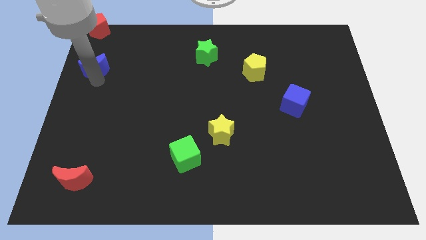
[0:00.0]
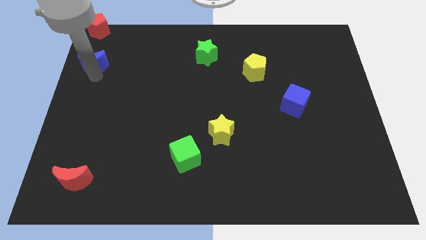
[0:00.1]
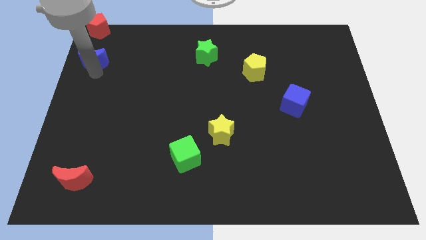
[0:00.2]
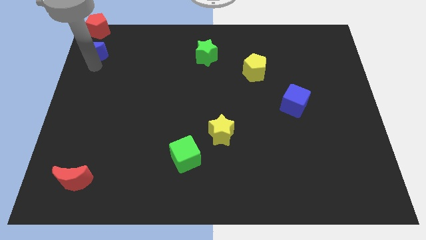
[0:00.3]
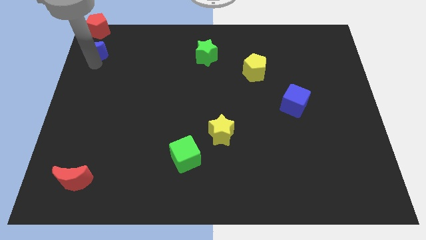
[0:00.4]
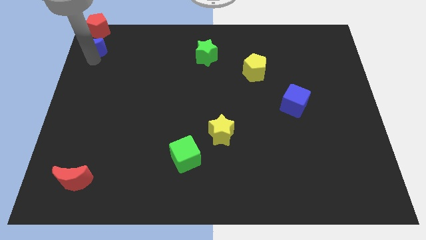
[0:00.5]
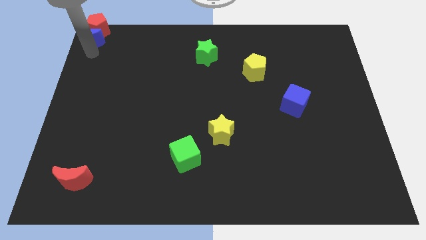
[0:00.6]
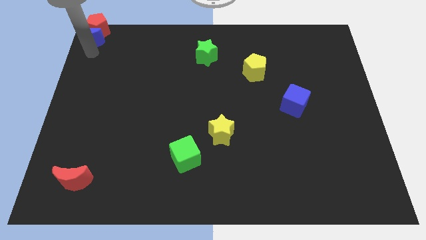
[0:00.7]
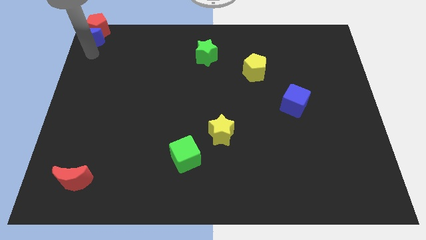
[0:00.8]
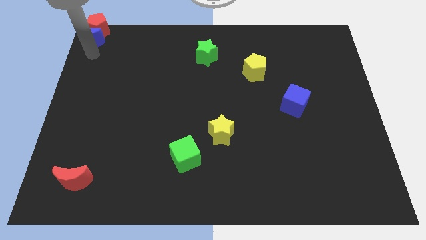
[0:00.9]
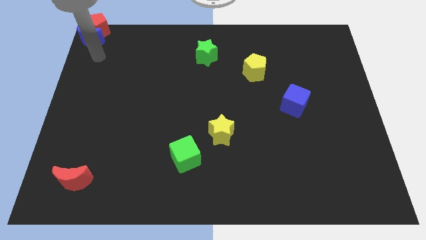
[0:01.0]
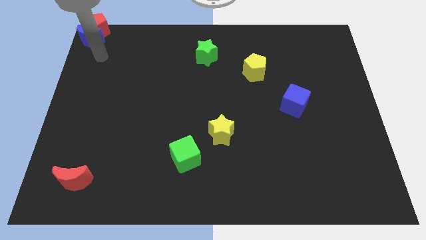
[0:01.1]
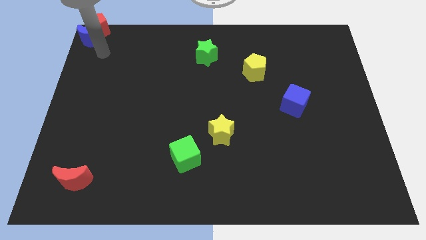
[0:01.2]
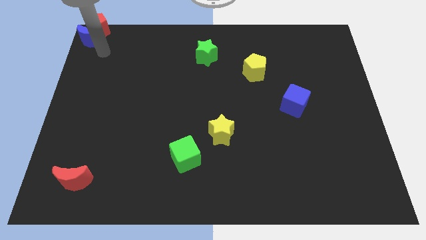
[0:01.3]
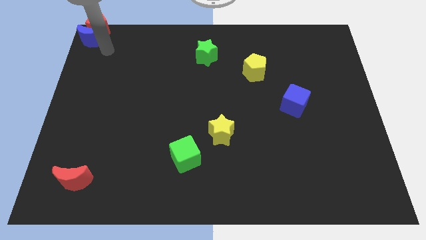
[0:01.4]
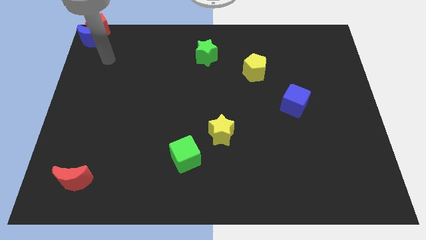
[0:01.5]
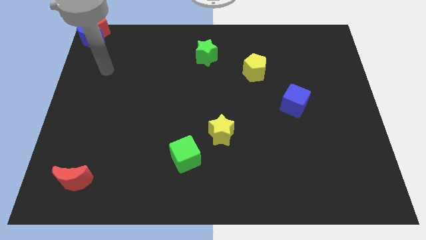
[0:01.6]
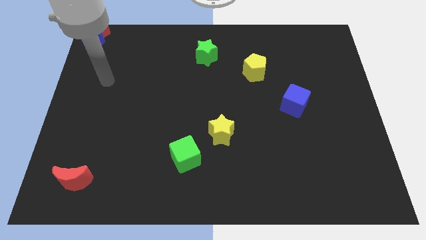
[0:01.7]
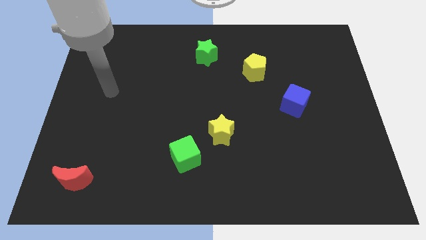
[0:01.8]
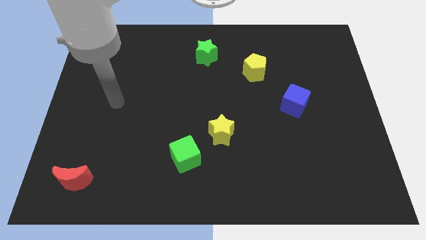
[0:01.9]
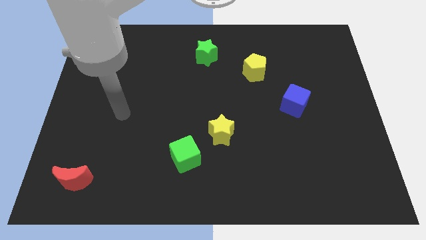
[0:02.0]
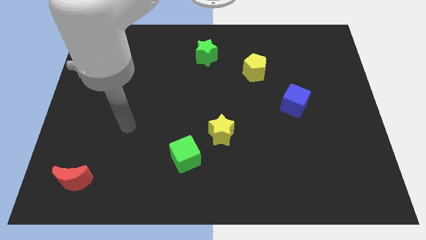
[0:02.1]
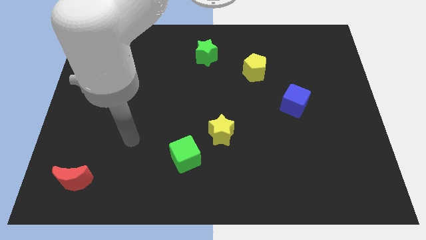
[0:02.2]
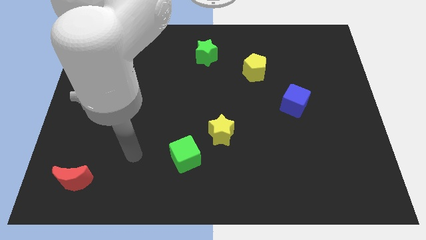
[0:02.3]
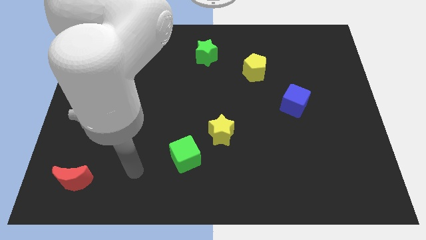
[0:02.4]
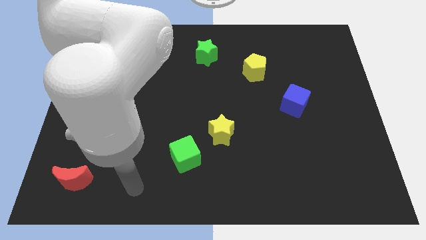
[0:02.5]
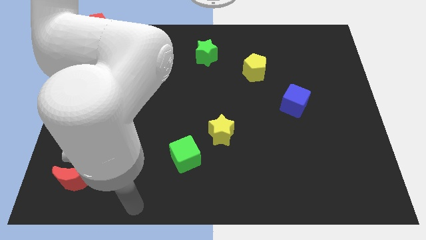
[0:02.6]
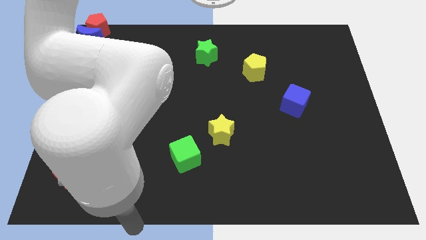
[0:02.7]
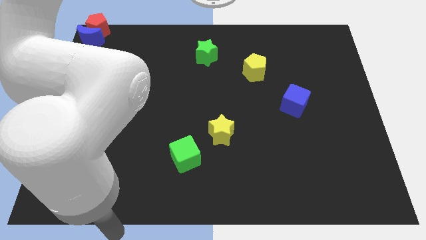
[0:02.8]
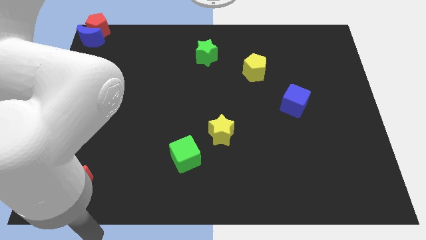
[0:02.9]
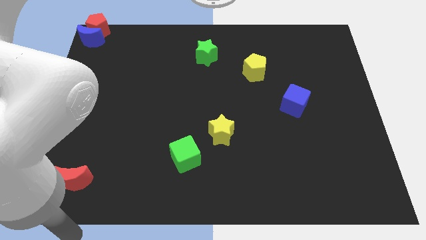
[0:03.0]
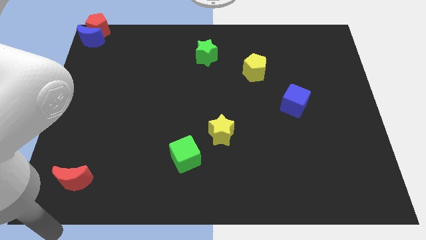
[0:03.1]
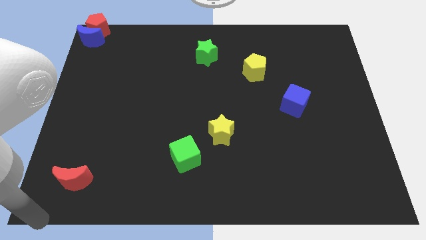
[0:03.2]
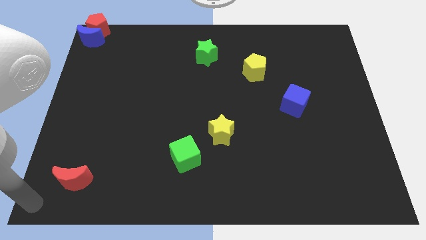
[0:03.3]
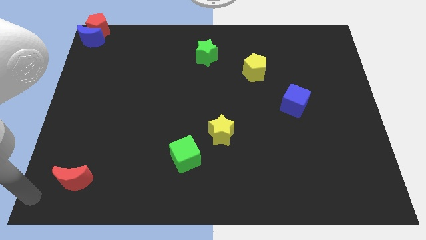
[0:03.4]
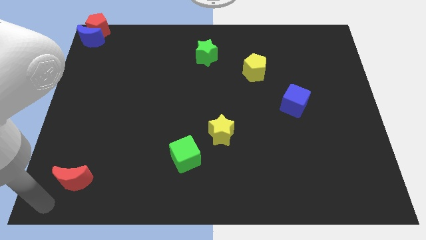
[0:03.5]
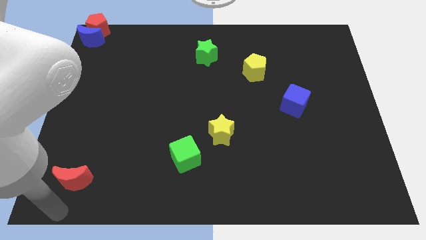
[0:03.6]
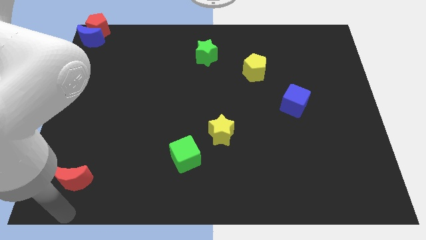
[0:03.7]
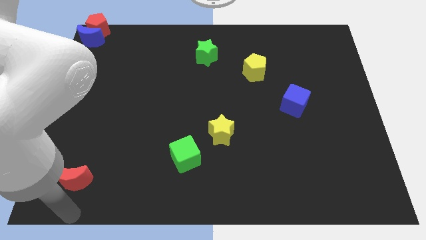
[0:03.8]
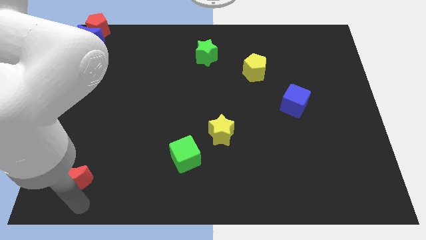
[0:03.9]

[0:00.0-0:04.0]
push the blue crescent close to the red pentagon

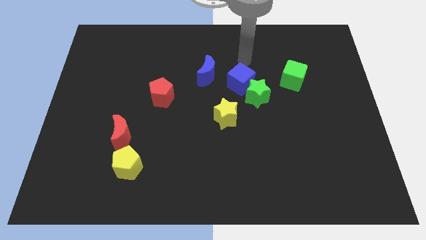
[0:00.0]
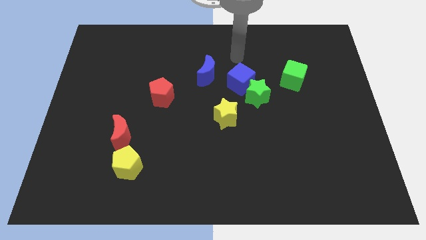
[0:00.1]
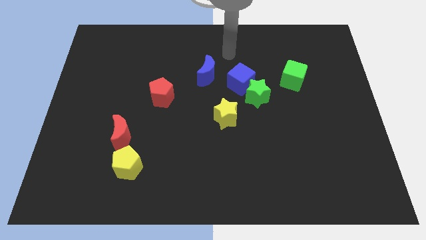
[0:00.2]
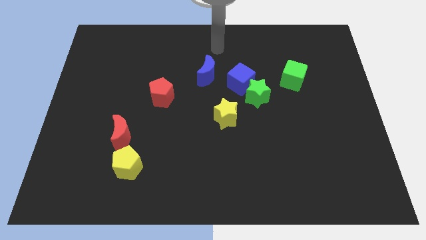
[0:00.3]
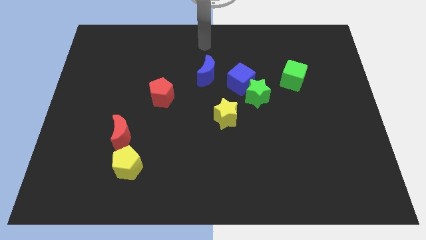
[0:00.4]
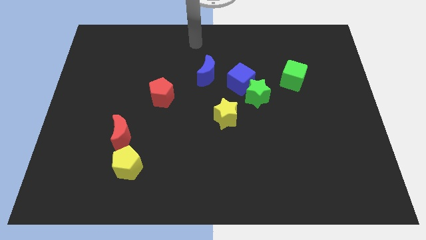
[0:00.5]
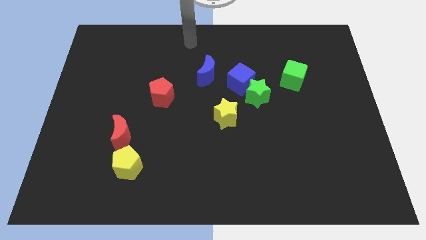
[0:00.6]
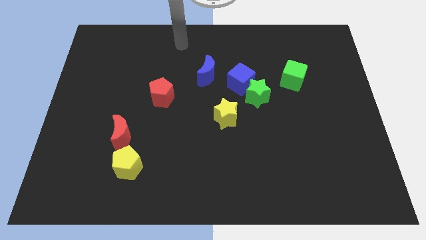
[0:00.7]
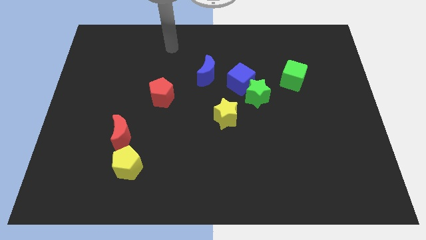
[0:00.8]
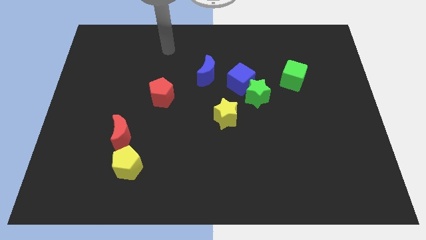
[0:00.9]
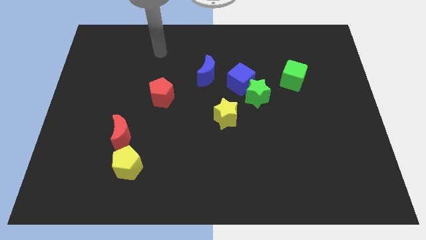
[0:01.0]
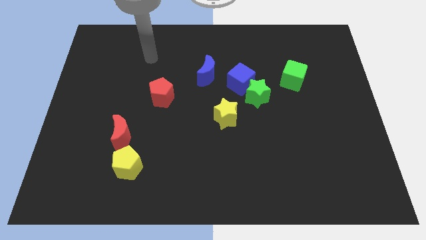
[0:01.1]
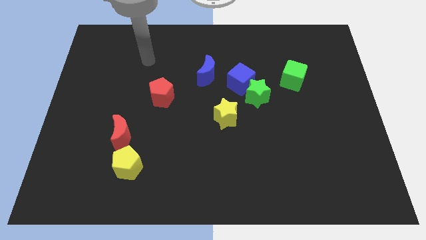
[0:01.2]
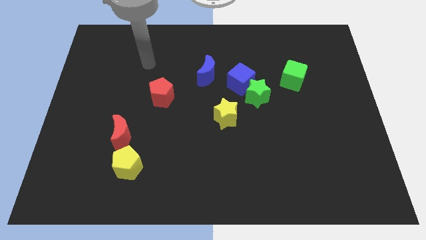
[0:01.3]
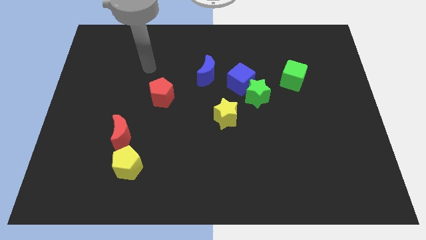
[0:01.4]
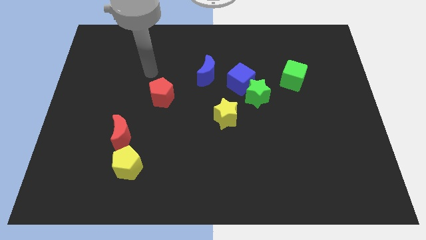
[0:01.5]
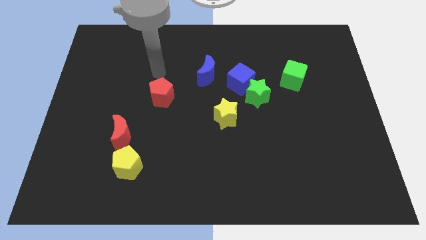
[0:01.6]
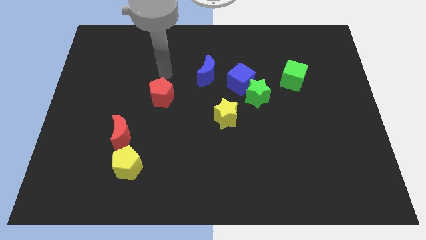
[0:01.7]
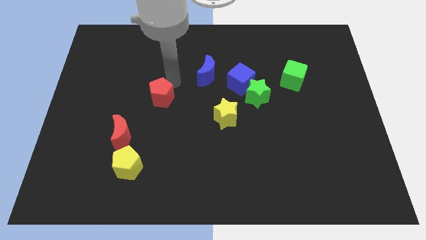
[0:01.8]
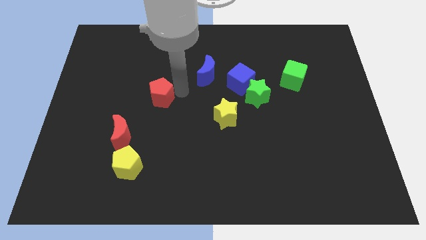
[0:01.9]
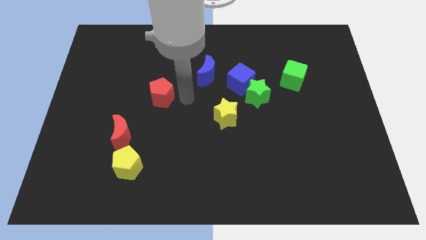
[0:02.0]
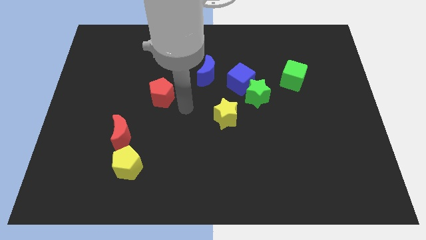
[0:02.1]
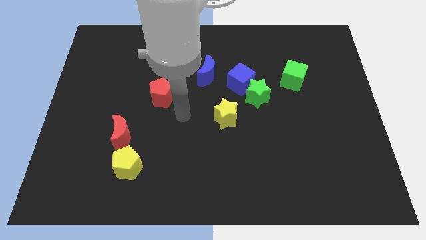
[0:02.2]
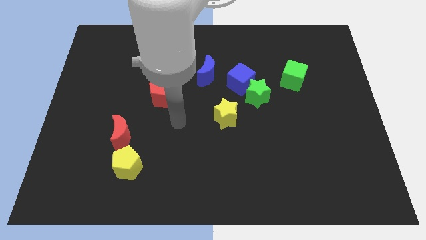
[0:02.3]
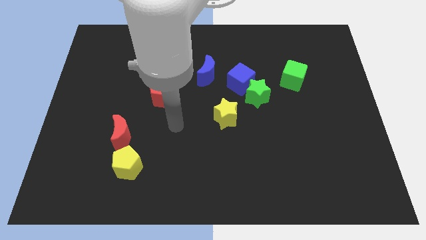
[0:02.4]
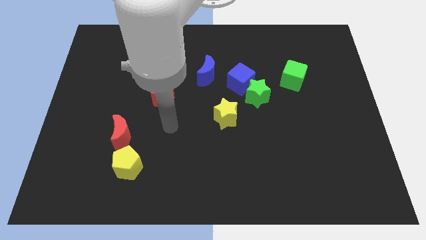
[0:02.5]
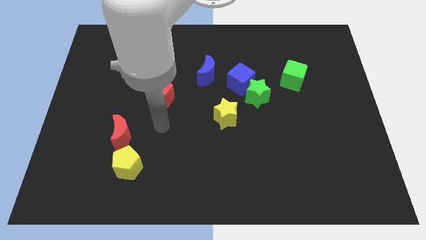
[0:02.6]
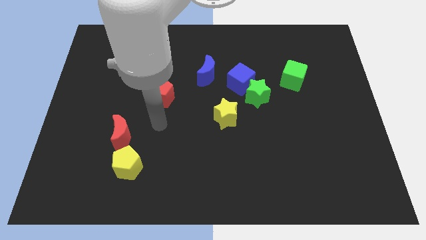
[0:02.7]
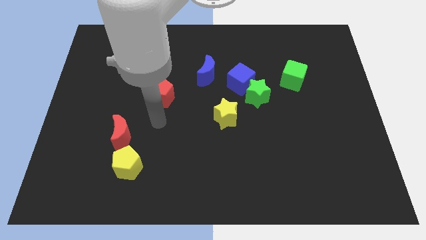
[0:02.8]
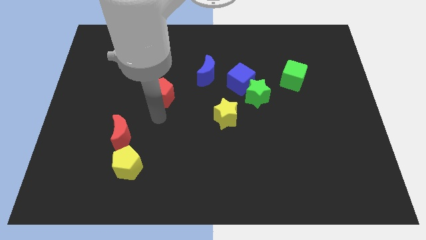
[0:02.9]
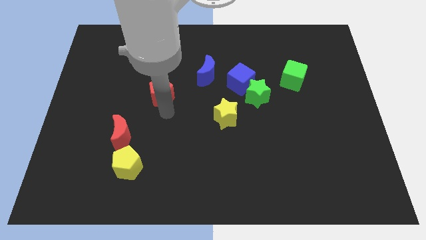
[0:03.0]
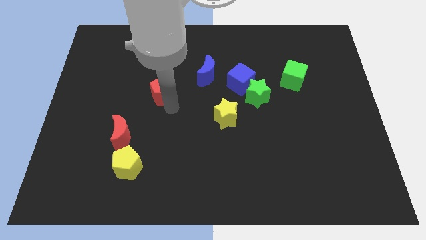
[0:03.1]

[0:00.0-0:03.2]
move the arm to the red pentagon

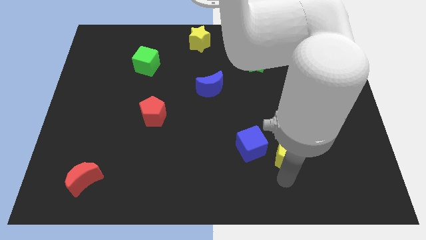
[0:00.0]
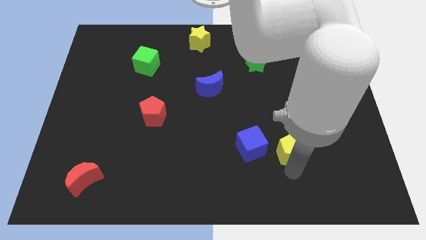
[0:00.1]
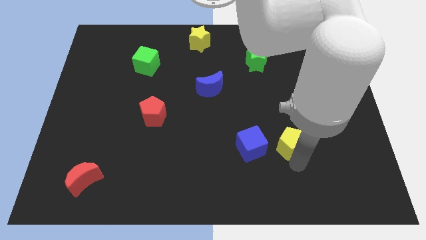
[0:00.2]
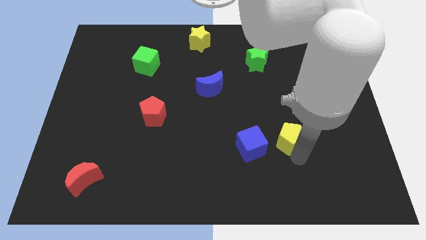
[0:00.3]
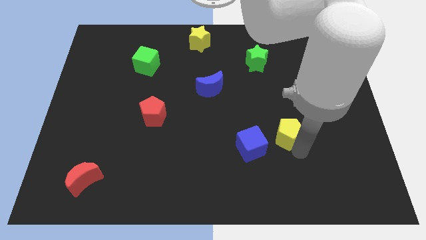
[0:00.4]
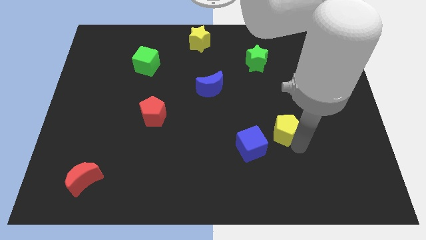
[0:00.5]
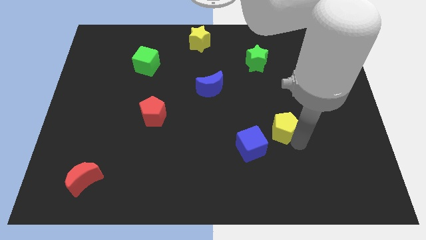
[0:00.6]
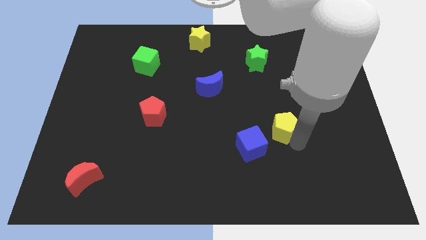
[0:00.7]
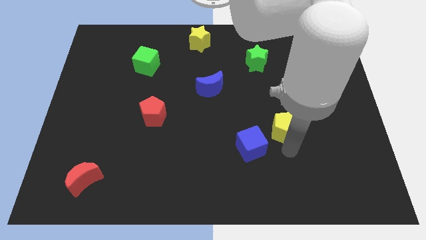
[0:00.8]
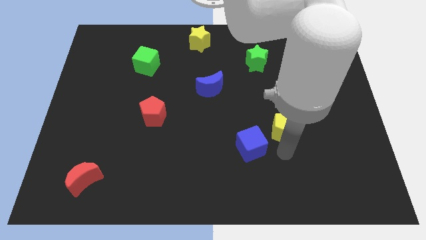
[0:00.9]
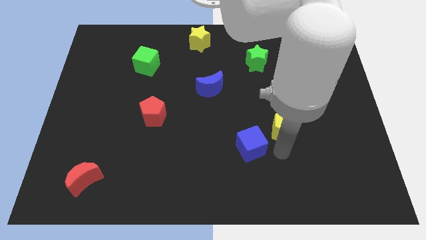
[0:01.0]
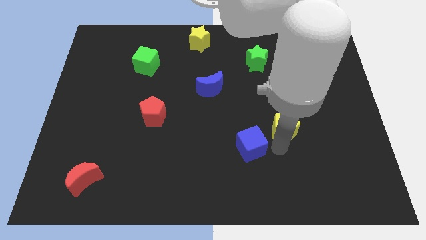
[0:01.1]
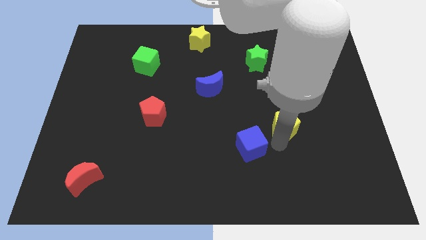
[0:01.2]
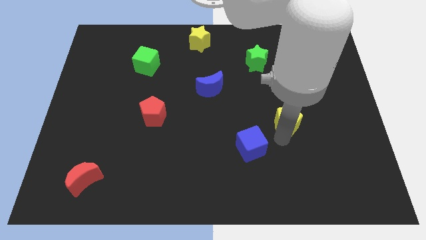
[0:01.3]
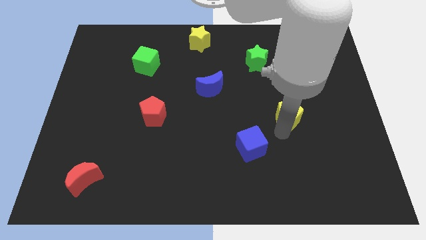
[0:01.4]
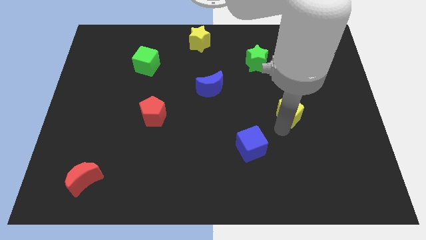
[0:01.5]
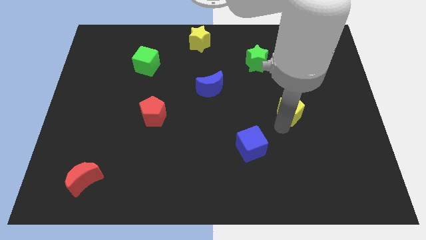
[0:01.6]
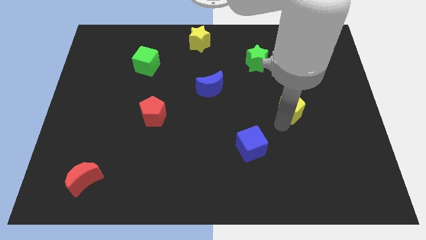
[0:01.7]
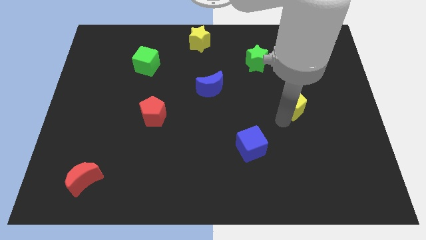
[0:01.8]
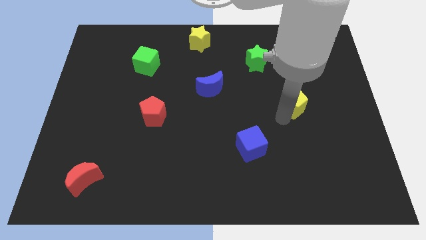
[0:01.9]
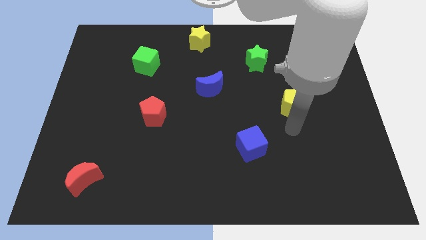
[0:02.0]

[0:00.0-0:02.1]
separate yellow pentagon from blue cube
